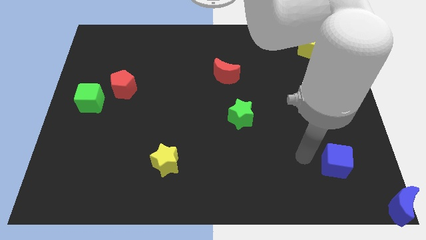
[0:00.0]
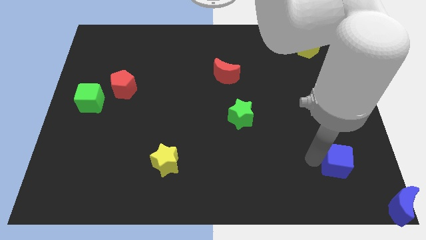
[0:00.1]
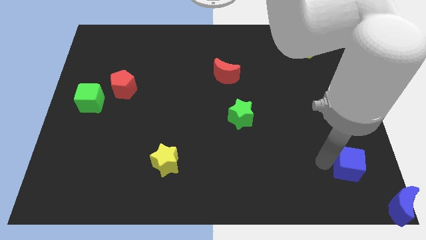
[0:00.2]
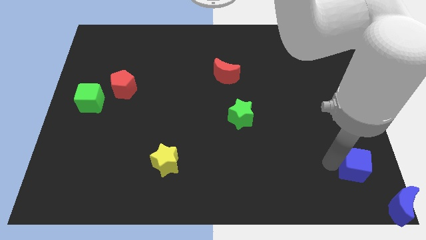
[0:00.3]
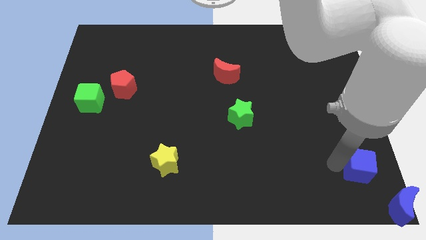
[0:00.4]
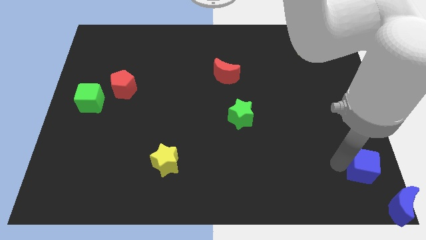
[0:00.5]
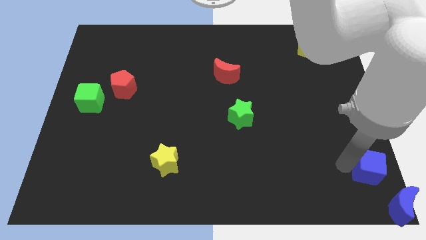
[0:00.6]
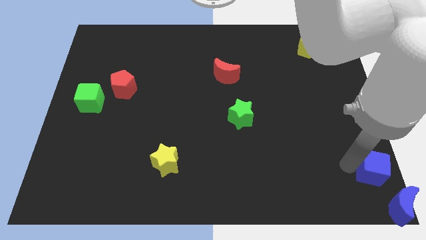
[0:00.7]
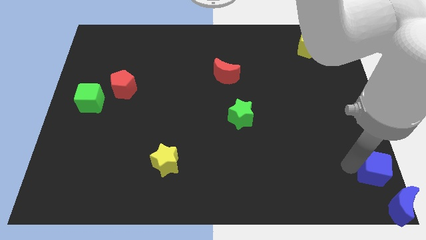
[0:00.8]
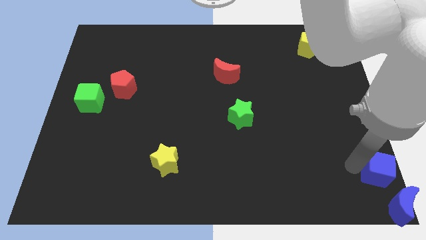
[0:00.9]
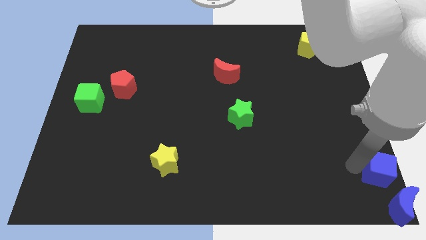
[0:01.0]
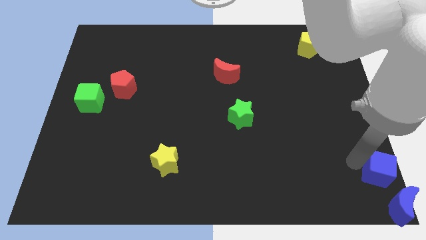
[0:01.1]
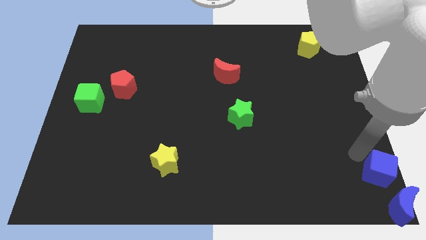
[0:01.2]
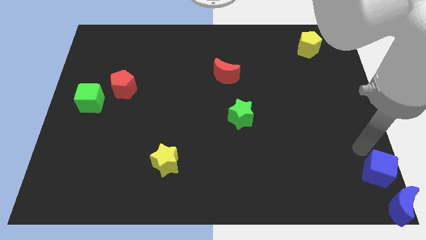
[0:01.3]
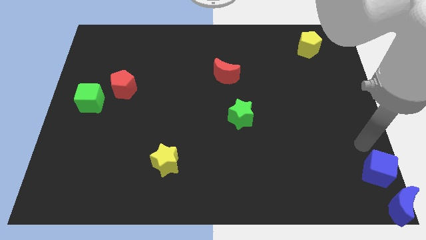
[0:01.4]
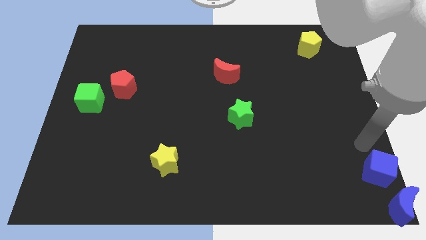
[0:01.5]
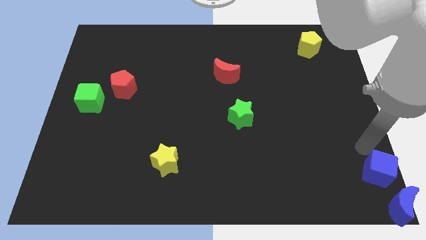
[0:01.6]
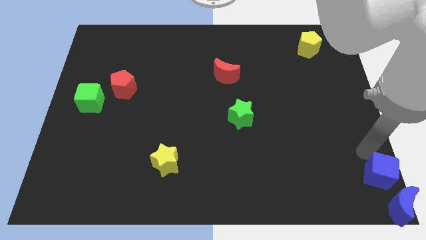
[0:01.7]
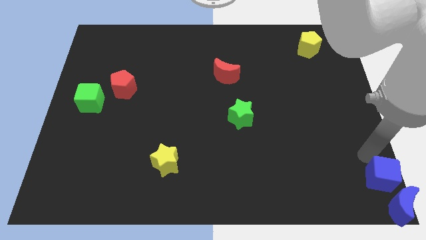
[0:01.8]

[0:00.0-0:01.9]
place the blue cube above the blue crescent

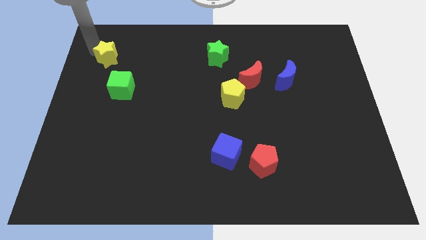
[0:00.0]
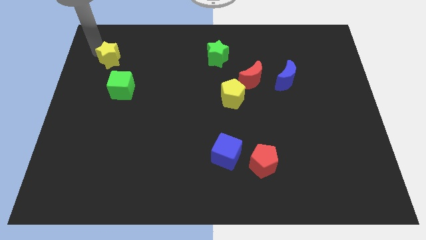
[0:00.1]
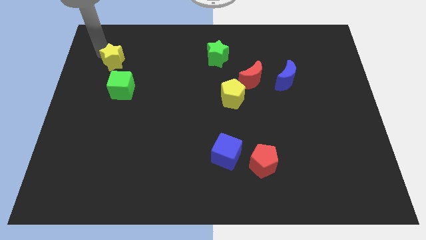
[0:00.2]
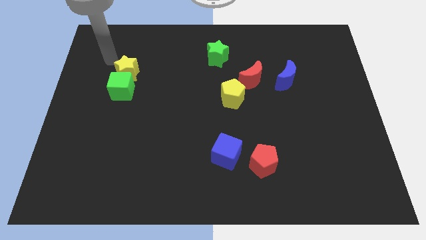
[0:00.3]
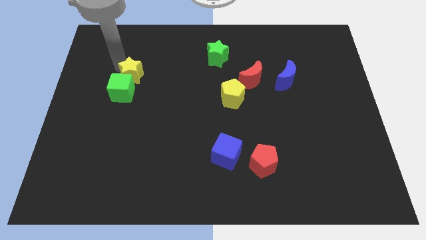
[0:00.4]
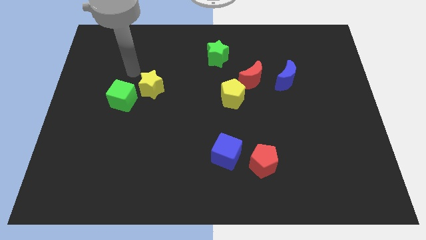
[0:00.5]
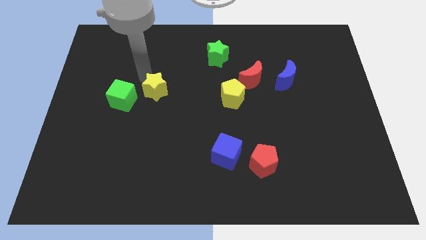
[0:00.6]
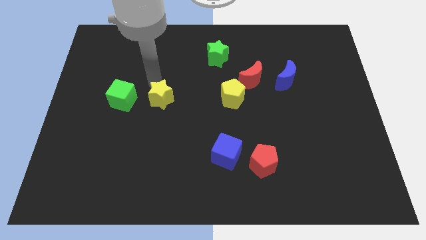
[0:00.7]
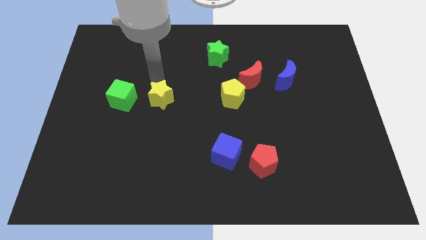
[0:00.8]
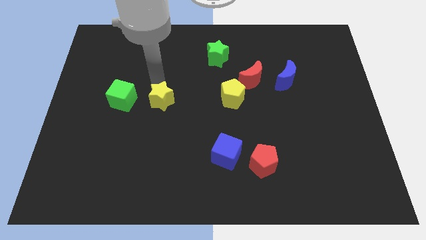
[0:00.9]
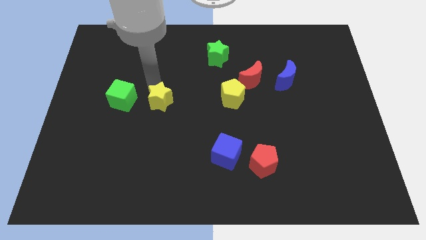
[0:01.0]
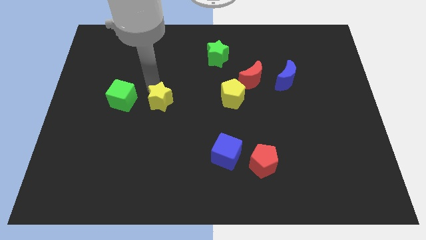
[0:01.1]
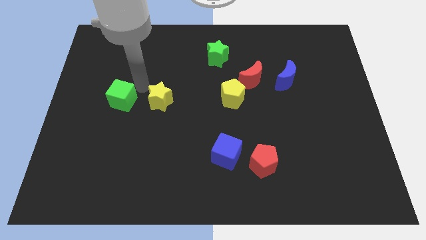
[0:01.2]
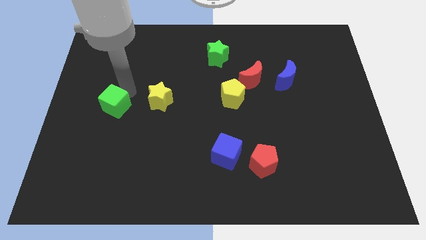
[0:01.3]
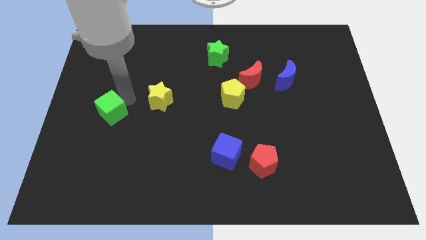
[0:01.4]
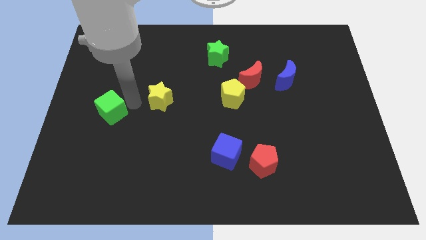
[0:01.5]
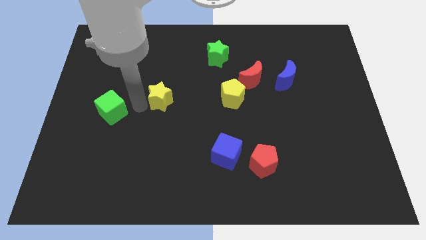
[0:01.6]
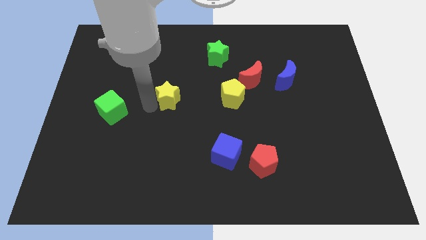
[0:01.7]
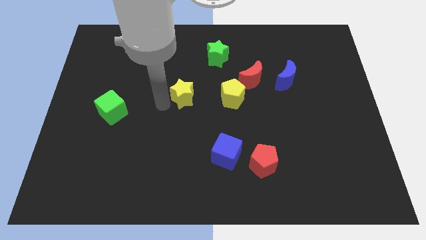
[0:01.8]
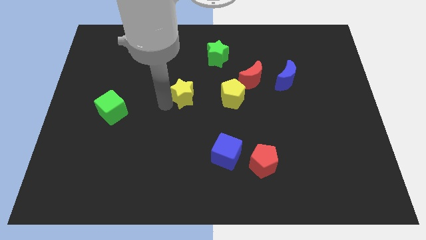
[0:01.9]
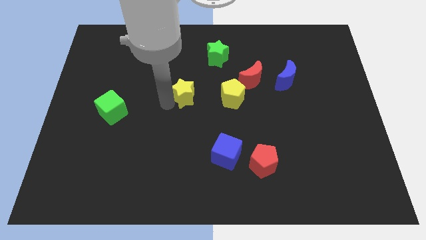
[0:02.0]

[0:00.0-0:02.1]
place yellow star to the left of yellow pentagon

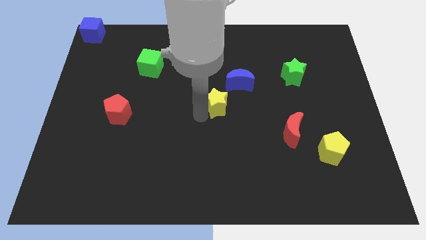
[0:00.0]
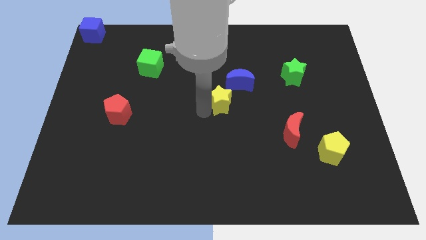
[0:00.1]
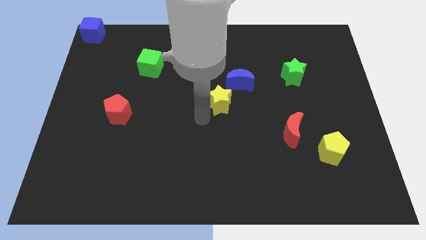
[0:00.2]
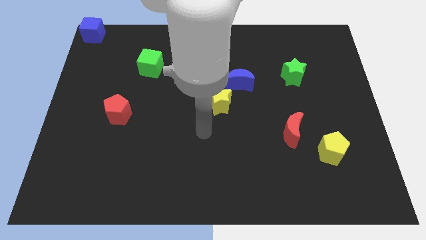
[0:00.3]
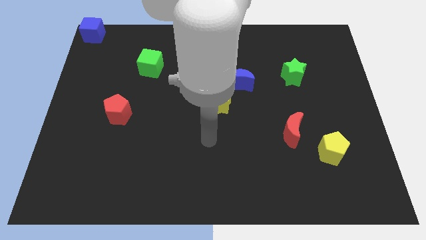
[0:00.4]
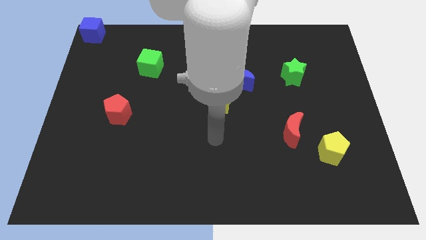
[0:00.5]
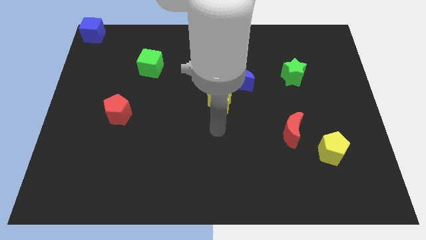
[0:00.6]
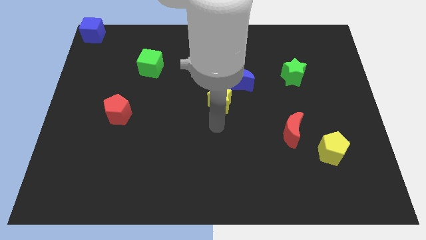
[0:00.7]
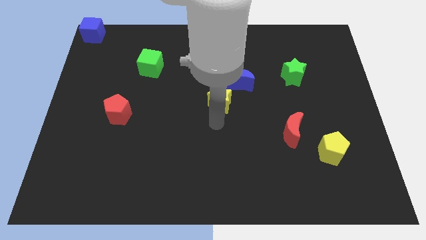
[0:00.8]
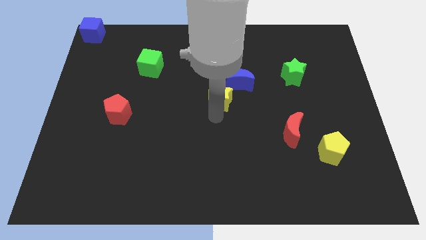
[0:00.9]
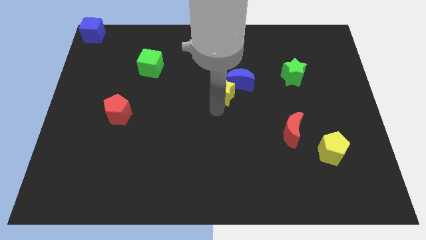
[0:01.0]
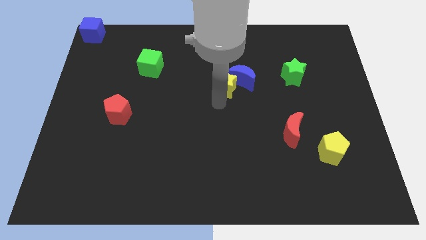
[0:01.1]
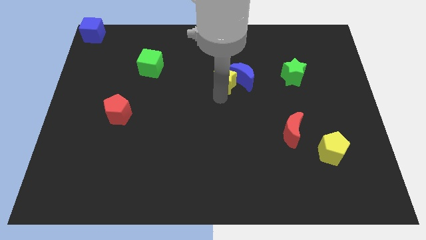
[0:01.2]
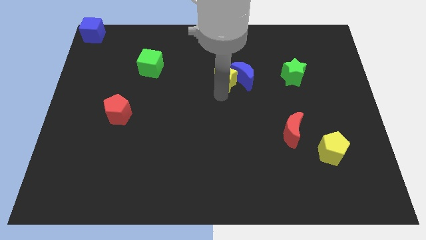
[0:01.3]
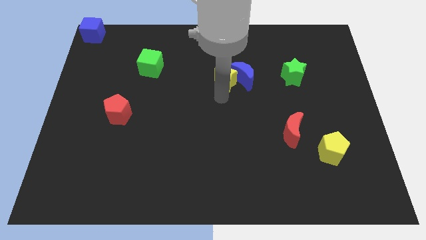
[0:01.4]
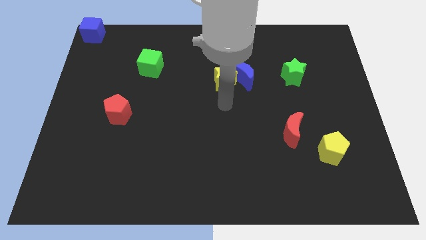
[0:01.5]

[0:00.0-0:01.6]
push the yellow star into the blue crescent

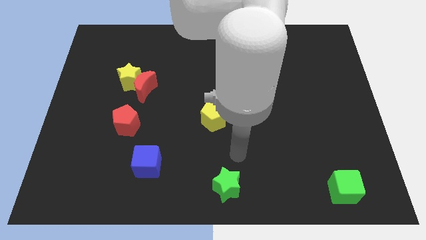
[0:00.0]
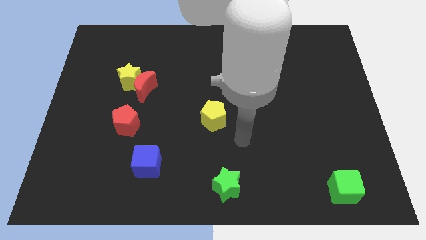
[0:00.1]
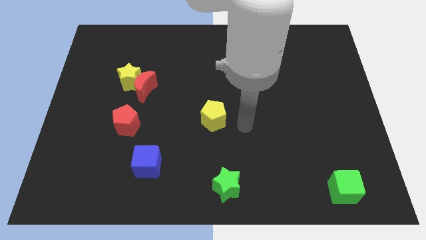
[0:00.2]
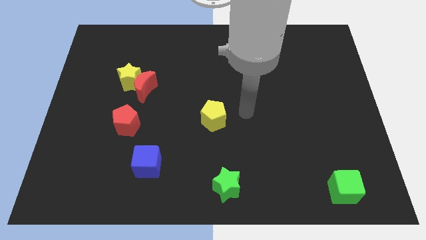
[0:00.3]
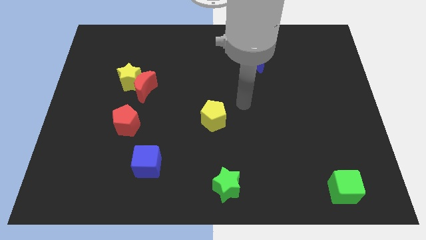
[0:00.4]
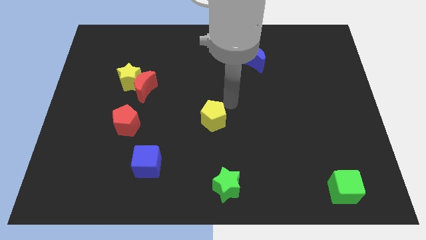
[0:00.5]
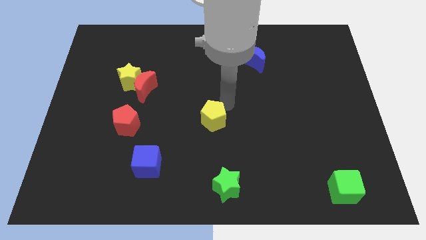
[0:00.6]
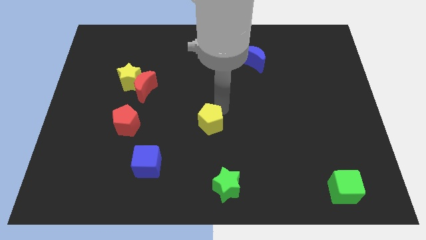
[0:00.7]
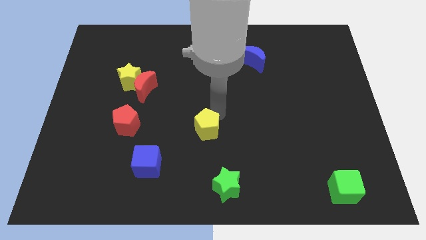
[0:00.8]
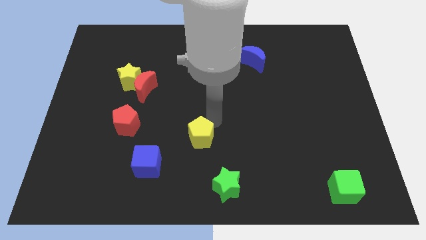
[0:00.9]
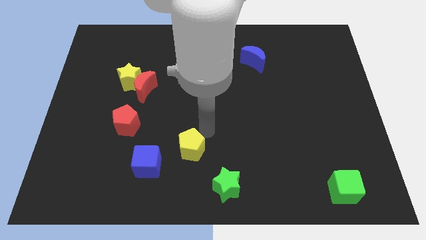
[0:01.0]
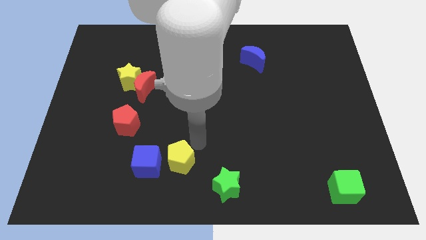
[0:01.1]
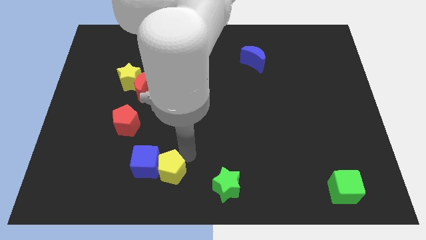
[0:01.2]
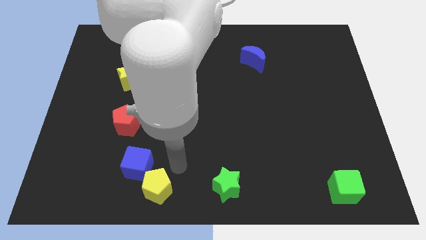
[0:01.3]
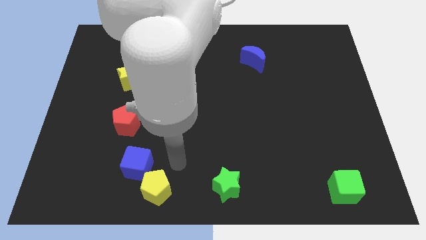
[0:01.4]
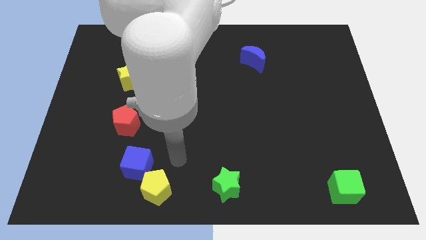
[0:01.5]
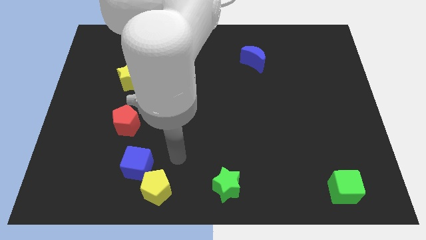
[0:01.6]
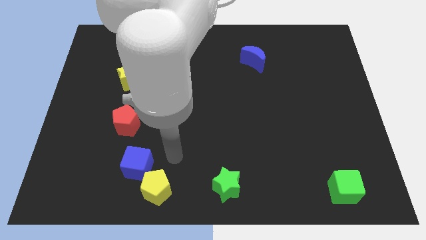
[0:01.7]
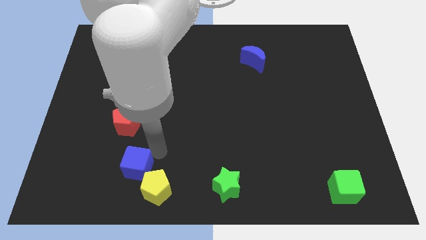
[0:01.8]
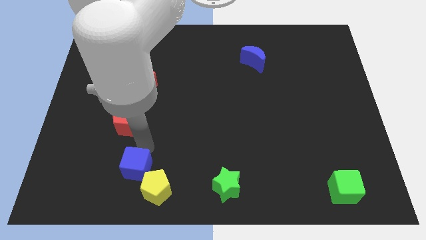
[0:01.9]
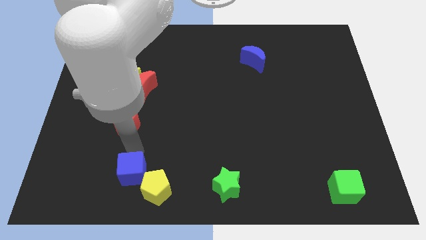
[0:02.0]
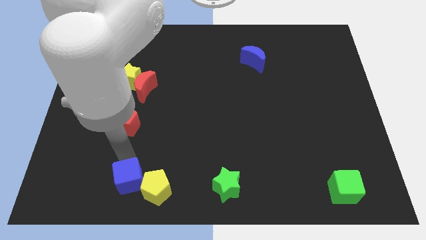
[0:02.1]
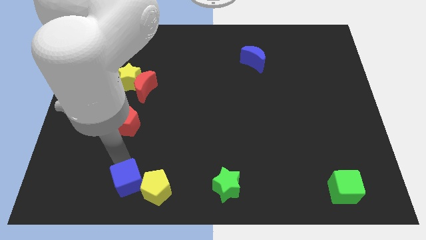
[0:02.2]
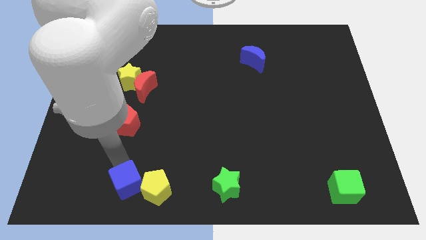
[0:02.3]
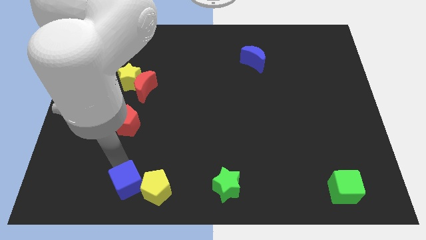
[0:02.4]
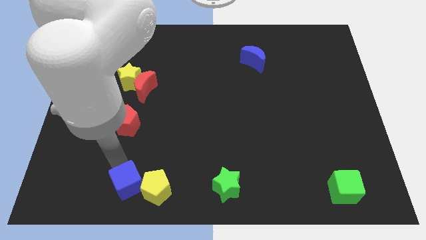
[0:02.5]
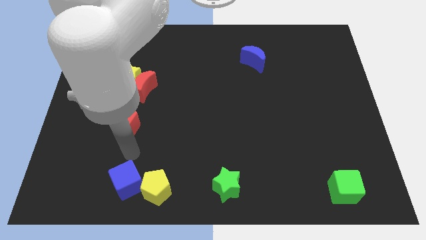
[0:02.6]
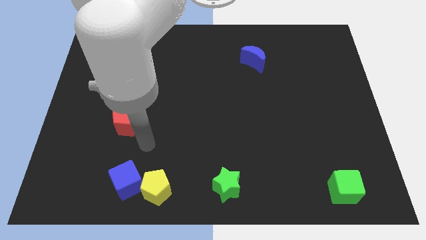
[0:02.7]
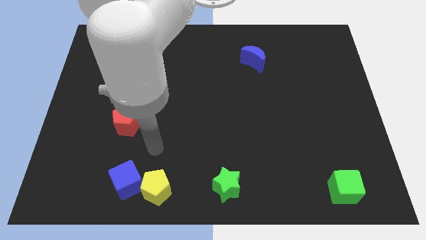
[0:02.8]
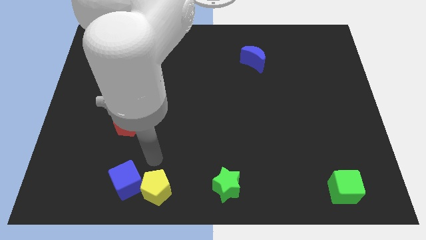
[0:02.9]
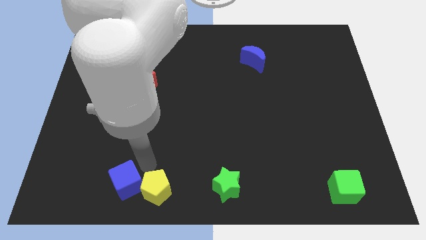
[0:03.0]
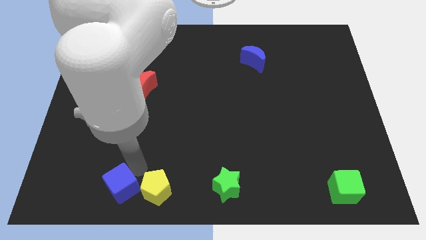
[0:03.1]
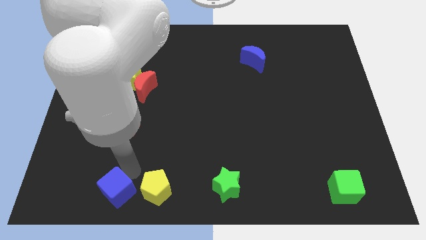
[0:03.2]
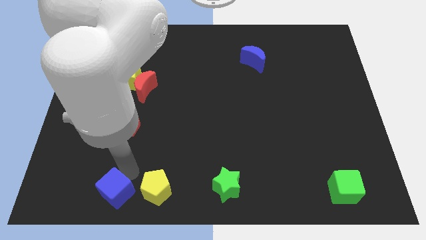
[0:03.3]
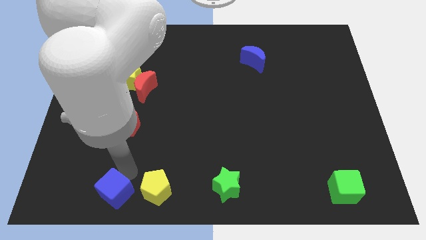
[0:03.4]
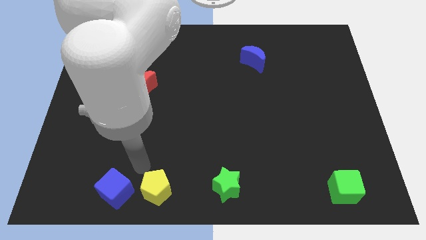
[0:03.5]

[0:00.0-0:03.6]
push yellow pentagon and blue cube to the left of the green star
